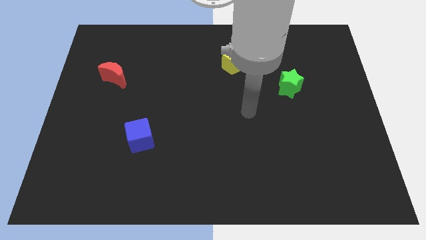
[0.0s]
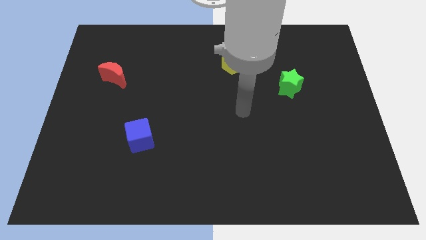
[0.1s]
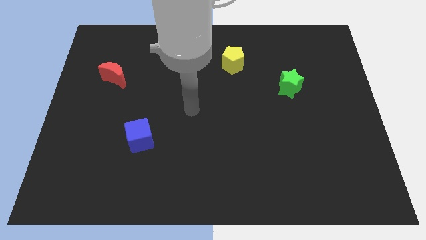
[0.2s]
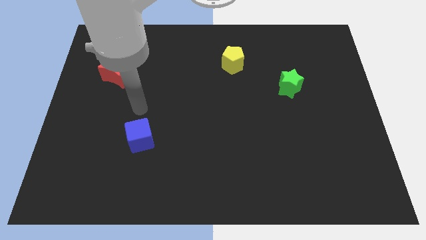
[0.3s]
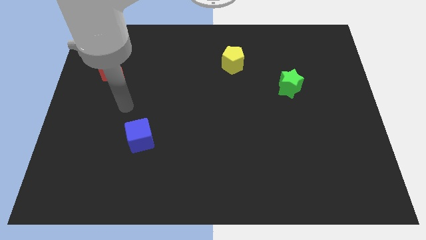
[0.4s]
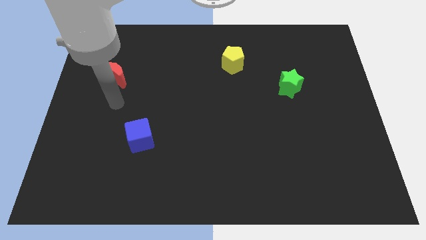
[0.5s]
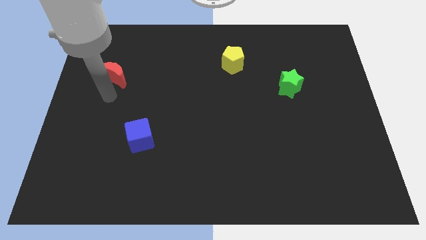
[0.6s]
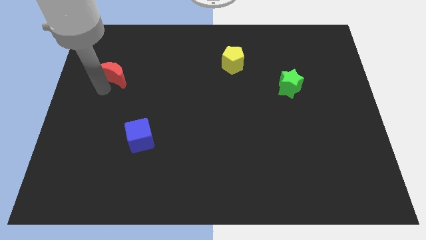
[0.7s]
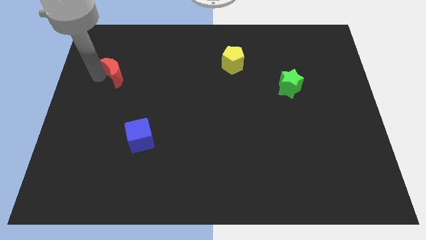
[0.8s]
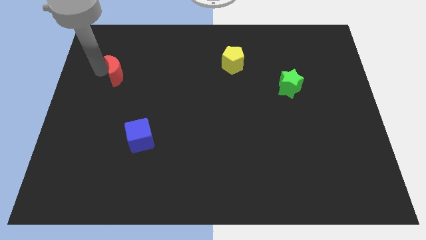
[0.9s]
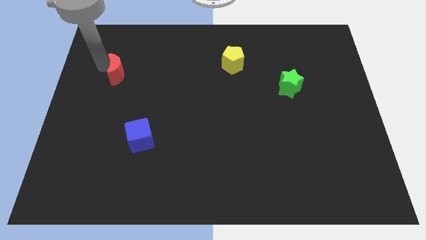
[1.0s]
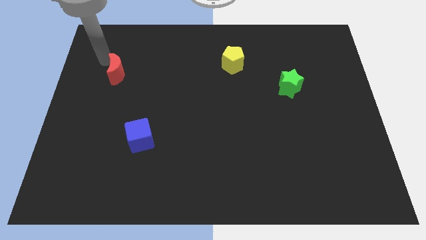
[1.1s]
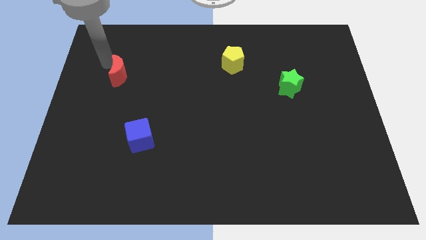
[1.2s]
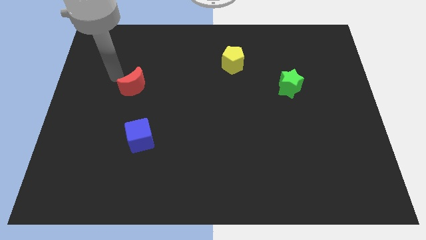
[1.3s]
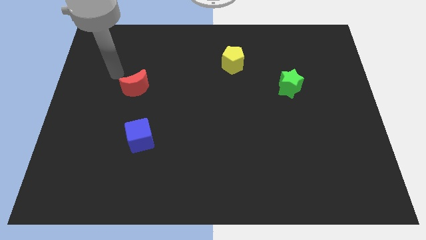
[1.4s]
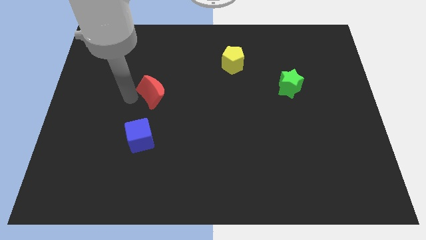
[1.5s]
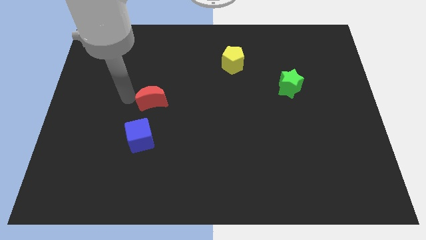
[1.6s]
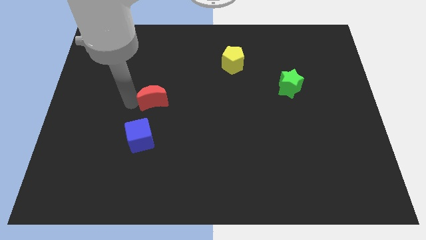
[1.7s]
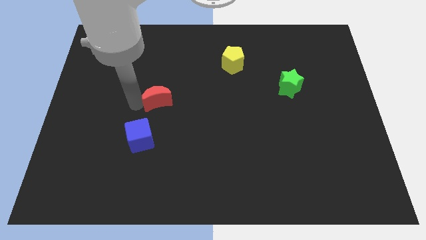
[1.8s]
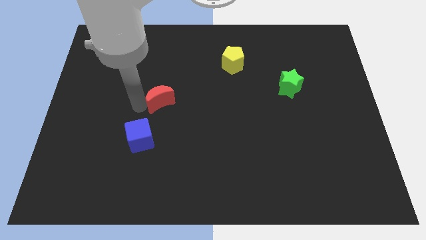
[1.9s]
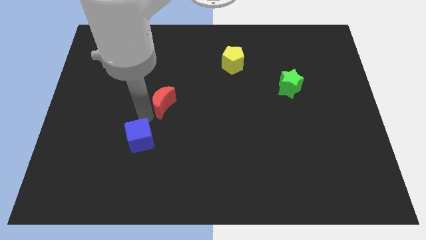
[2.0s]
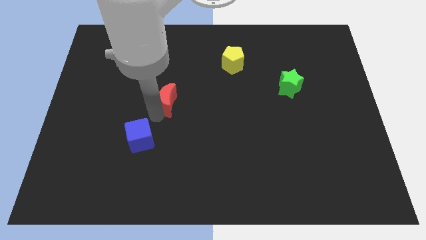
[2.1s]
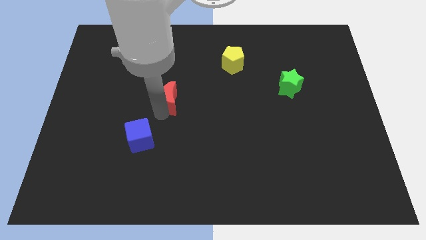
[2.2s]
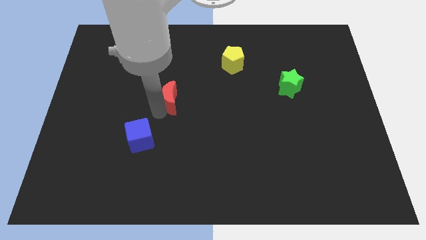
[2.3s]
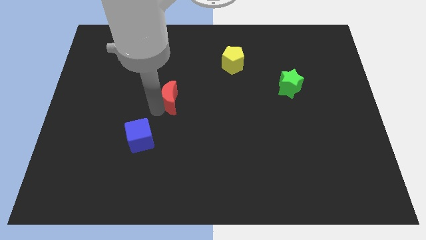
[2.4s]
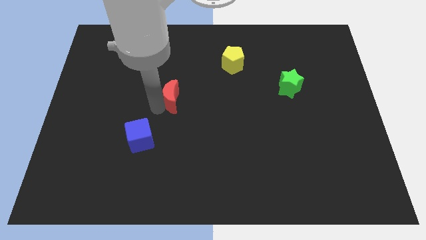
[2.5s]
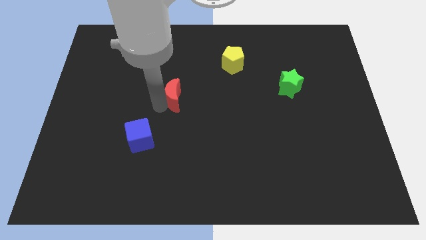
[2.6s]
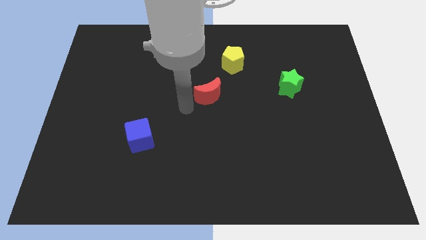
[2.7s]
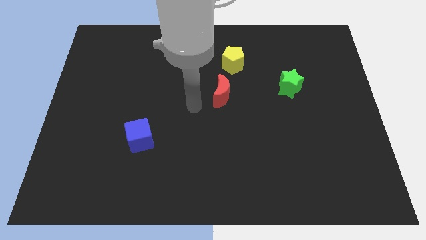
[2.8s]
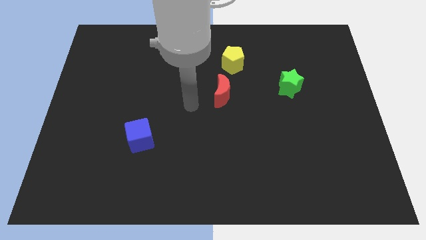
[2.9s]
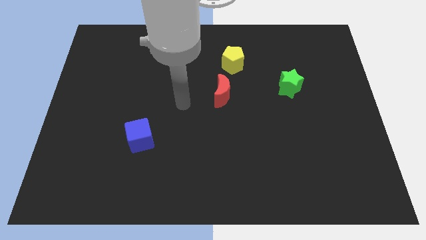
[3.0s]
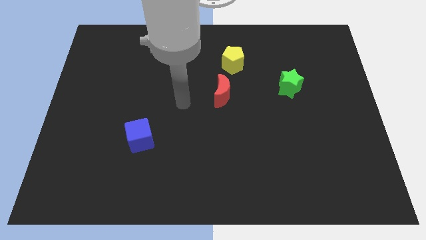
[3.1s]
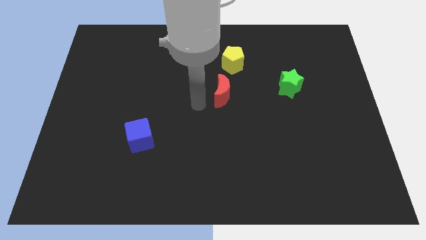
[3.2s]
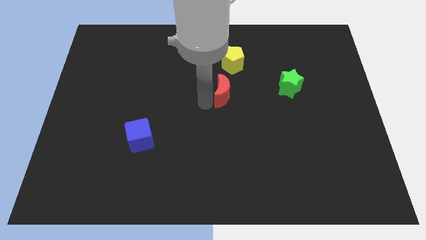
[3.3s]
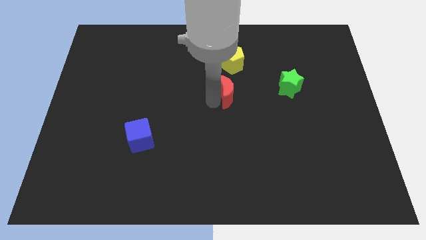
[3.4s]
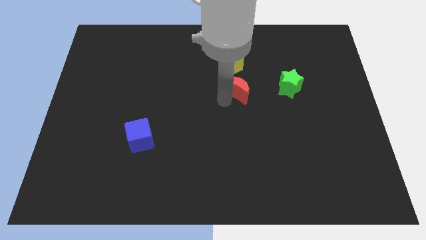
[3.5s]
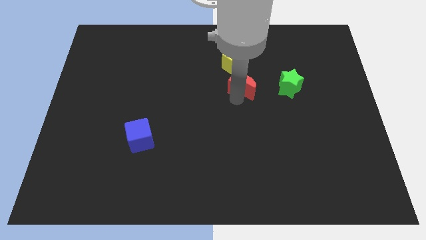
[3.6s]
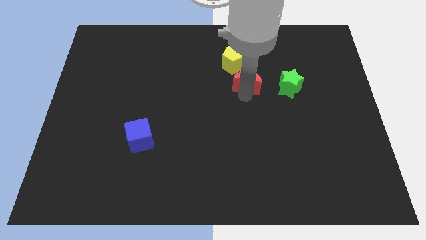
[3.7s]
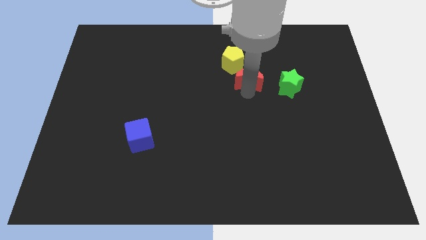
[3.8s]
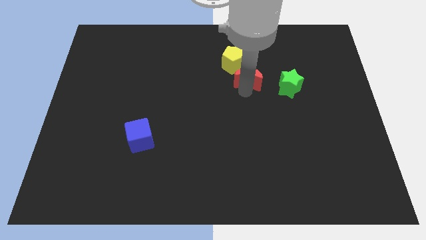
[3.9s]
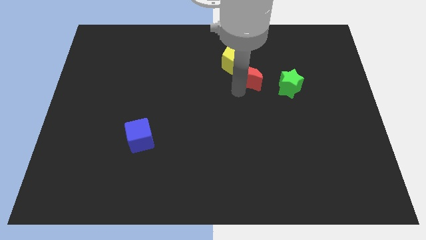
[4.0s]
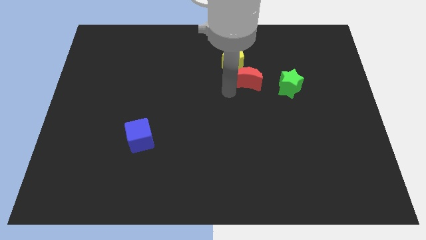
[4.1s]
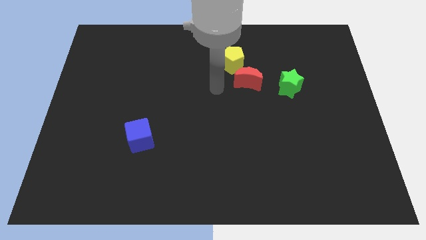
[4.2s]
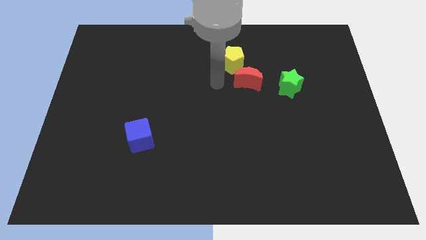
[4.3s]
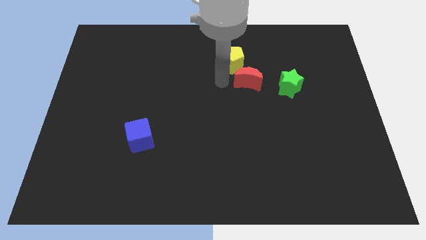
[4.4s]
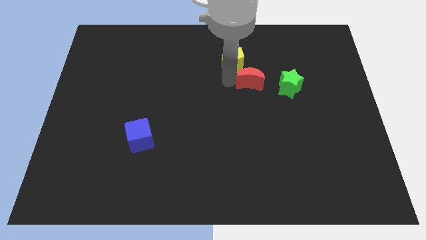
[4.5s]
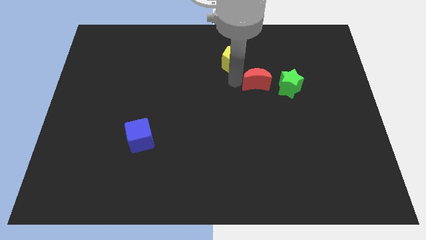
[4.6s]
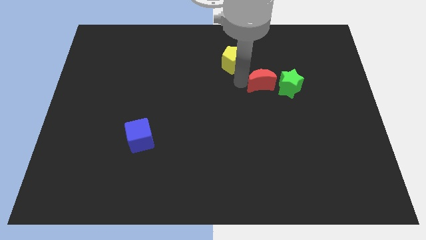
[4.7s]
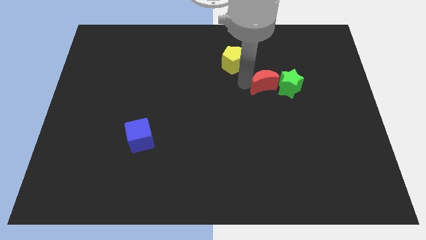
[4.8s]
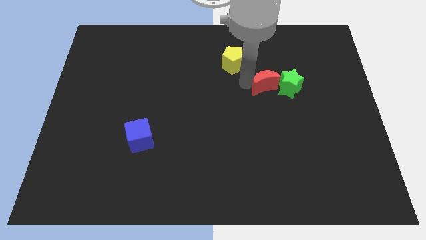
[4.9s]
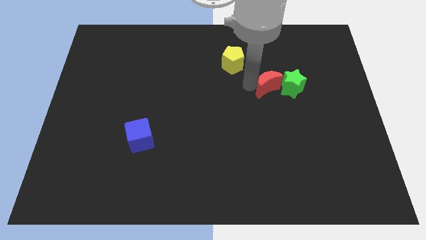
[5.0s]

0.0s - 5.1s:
push the moon close to the star

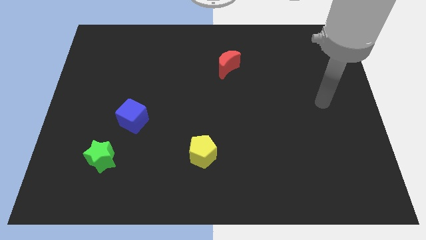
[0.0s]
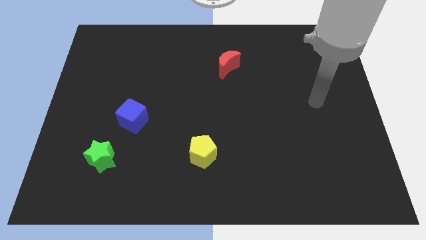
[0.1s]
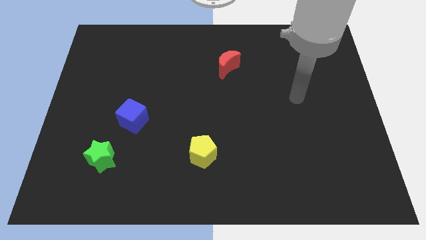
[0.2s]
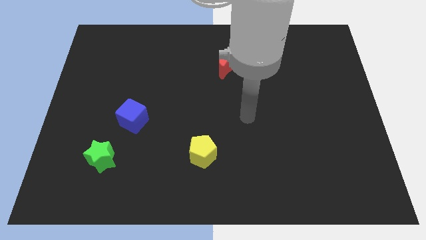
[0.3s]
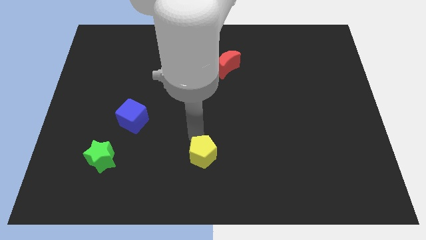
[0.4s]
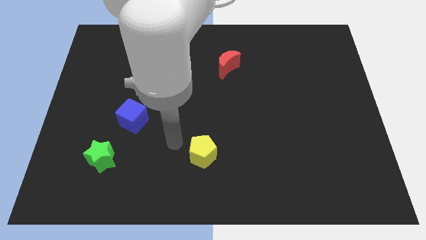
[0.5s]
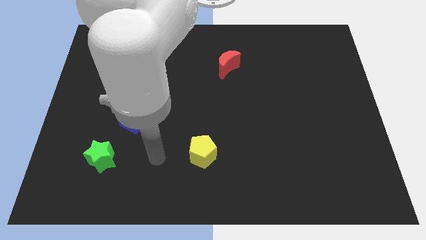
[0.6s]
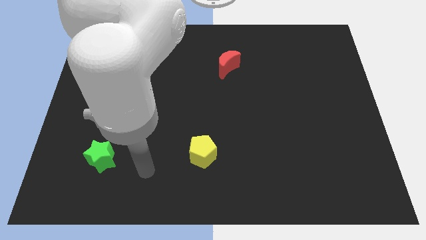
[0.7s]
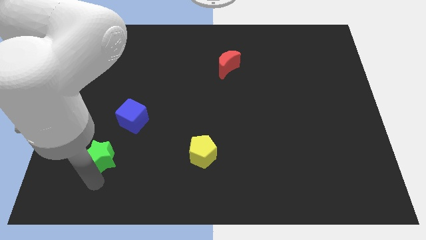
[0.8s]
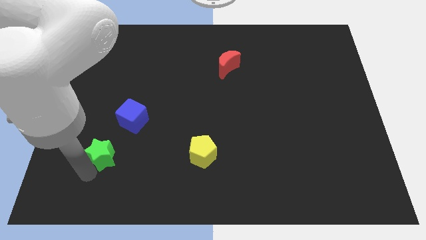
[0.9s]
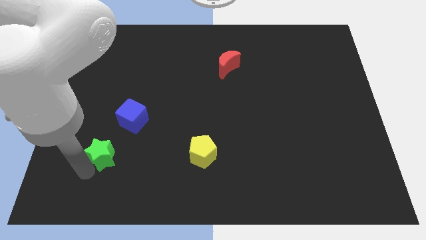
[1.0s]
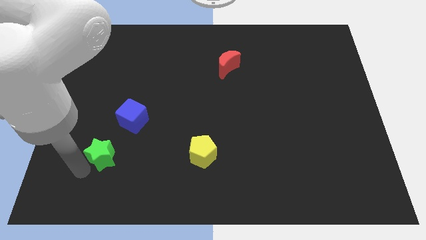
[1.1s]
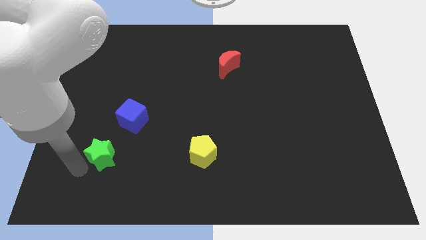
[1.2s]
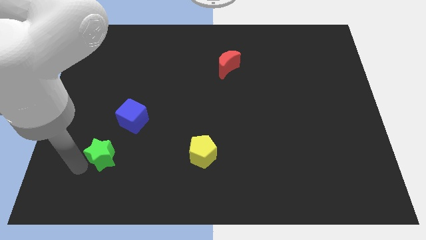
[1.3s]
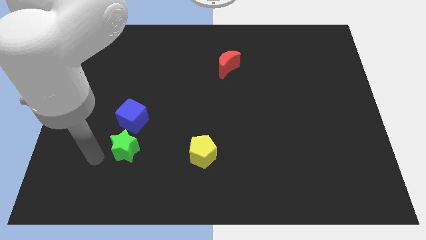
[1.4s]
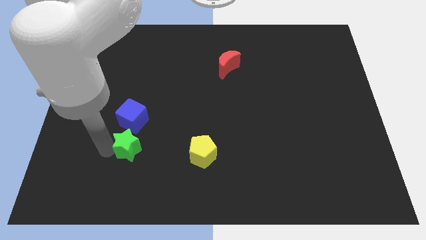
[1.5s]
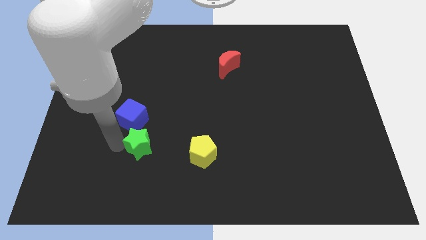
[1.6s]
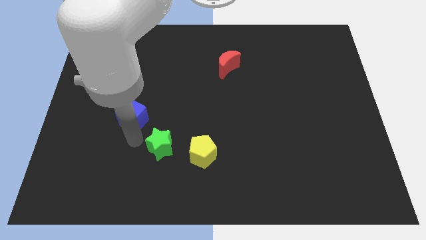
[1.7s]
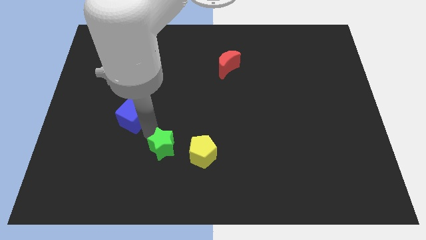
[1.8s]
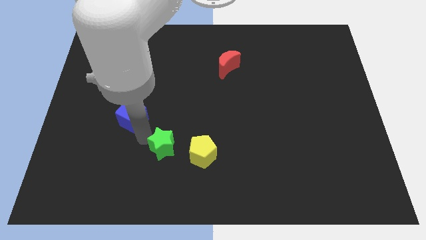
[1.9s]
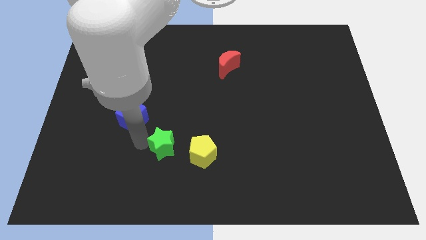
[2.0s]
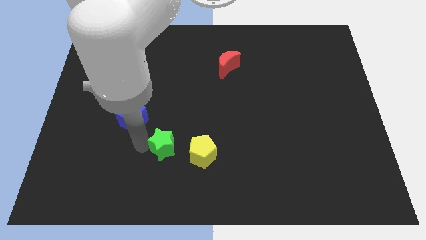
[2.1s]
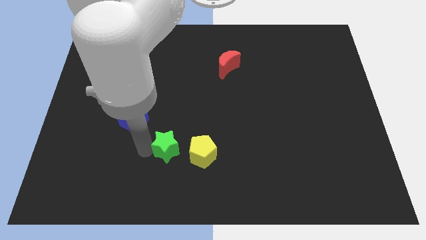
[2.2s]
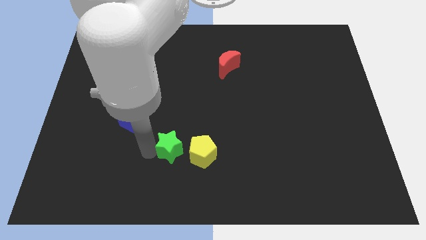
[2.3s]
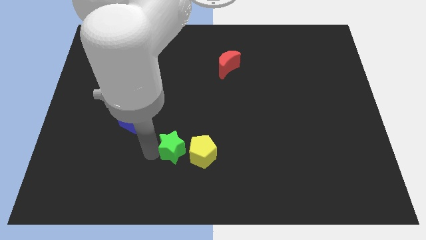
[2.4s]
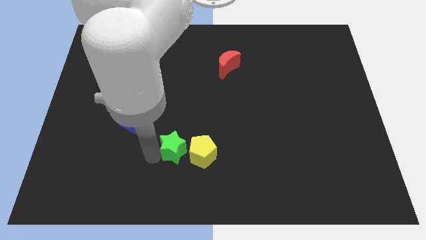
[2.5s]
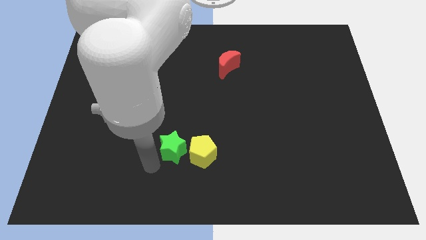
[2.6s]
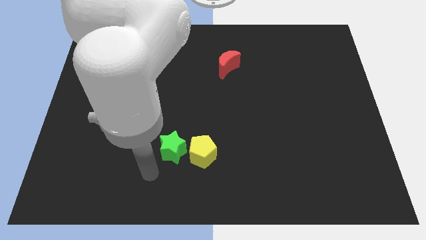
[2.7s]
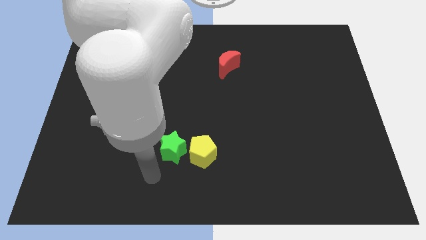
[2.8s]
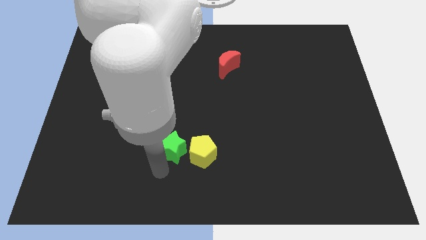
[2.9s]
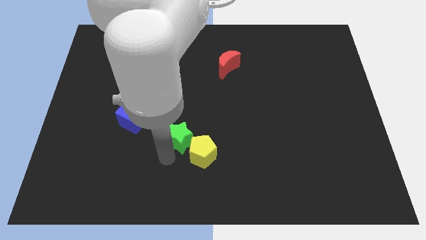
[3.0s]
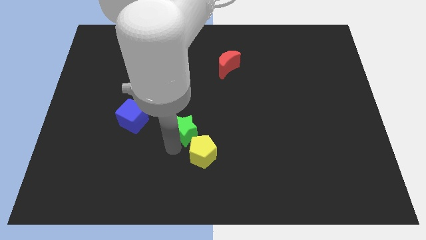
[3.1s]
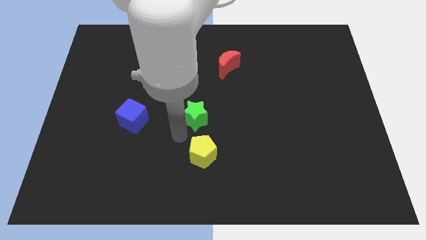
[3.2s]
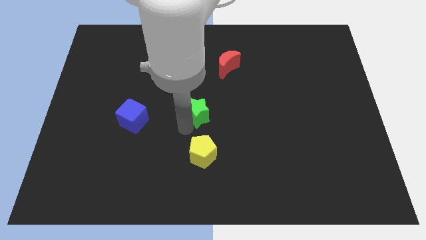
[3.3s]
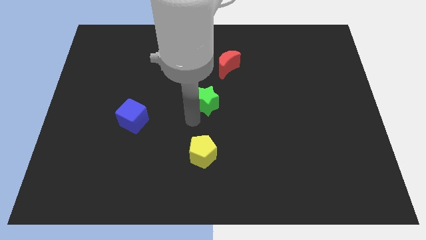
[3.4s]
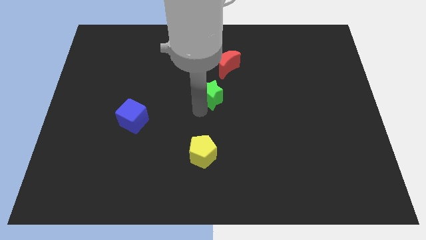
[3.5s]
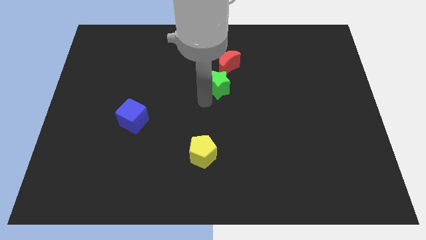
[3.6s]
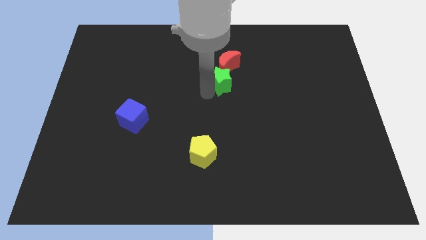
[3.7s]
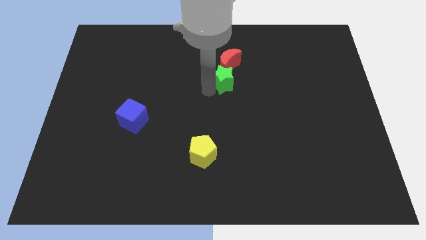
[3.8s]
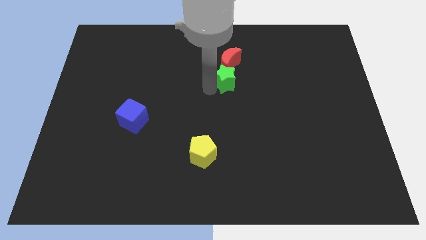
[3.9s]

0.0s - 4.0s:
slide the green block next to the red block
